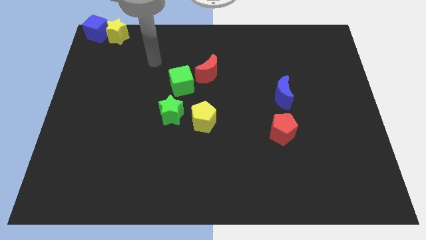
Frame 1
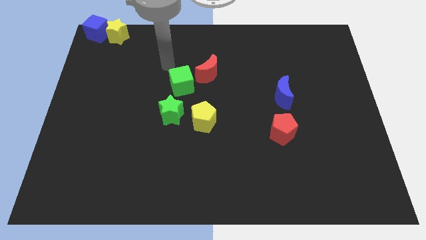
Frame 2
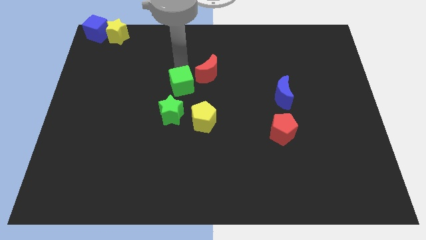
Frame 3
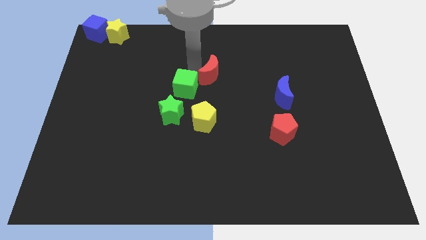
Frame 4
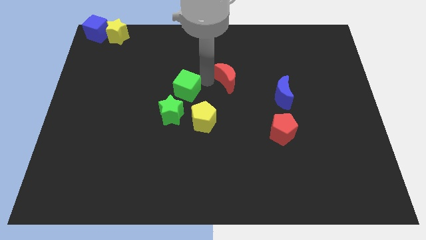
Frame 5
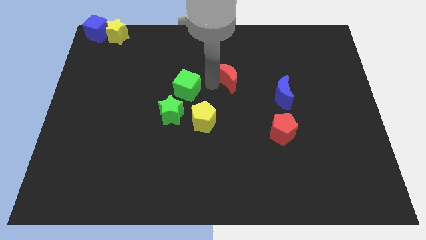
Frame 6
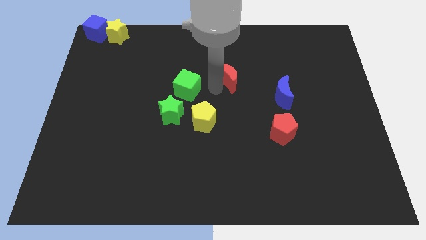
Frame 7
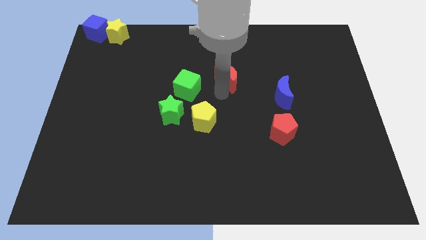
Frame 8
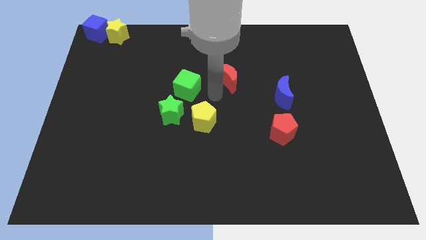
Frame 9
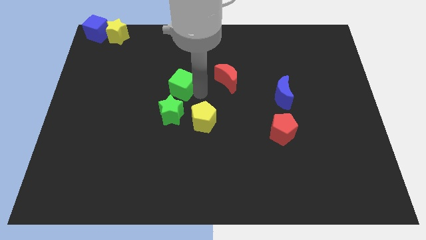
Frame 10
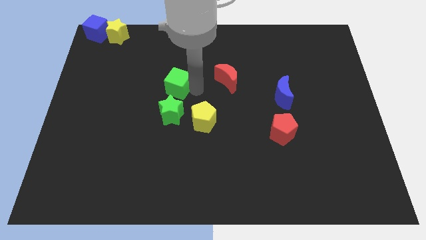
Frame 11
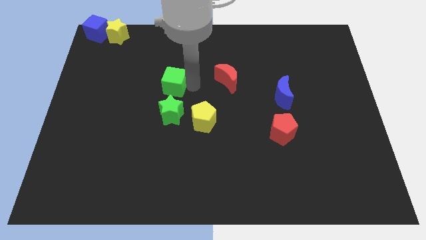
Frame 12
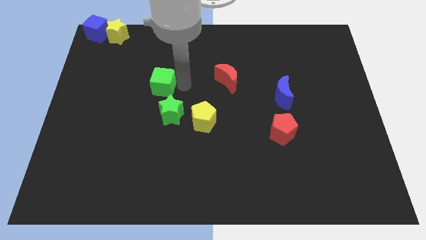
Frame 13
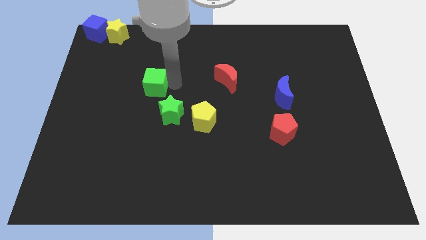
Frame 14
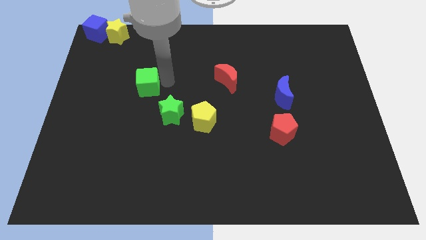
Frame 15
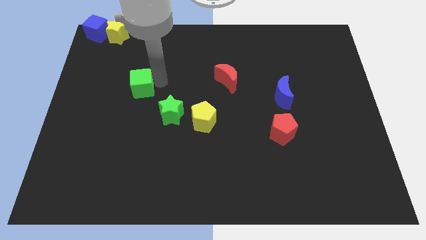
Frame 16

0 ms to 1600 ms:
push the green cube to the left

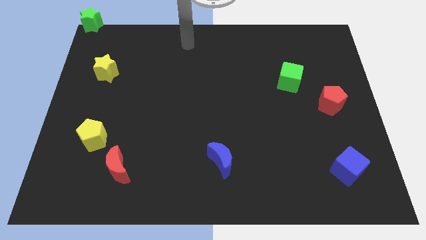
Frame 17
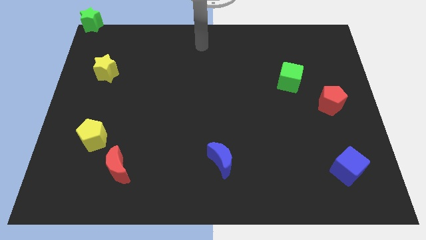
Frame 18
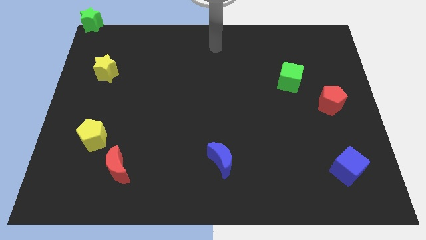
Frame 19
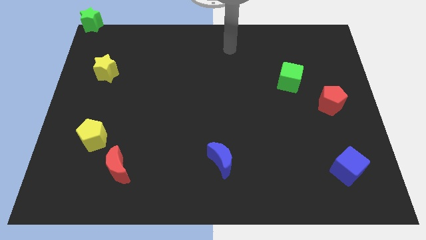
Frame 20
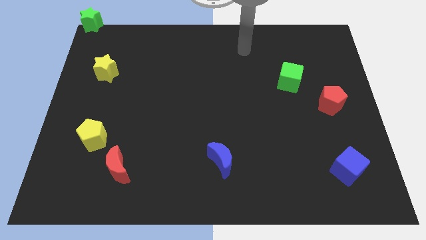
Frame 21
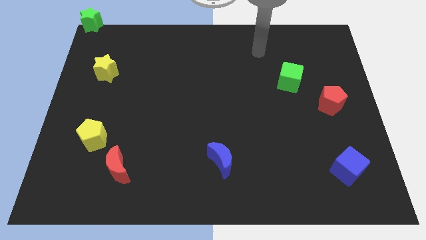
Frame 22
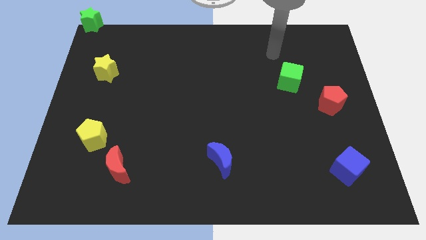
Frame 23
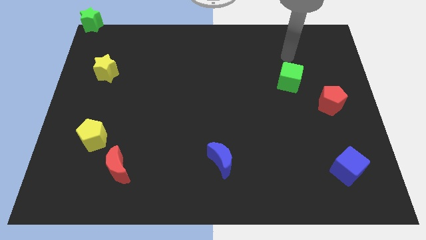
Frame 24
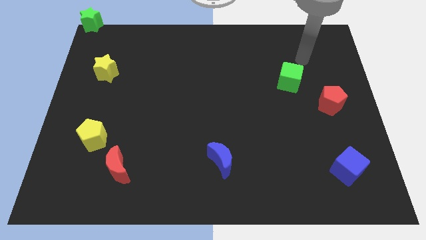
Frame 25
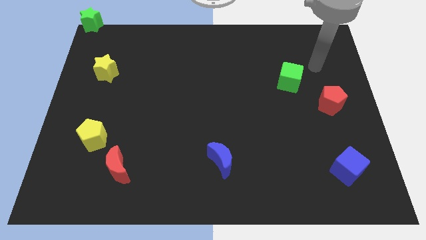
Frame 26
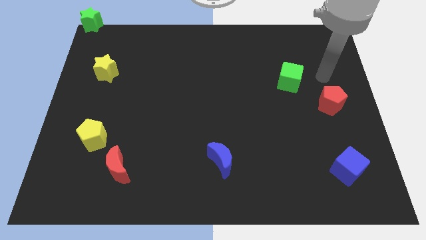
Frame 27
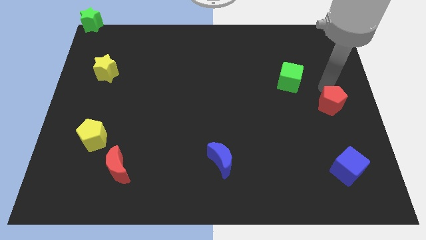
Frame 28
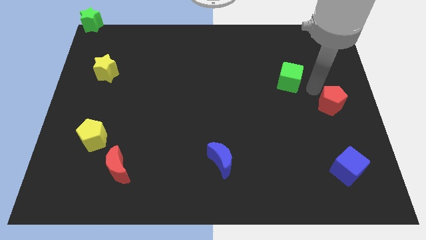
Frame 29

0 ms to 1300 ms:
move your hand towards the green cube

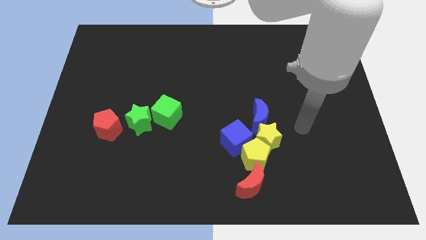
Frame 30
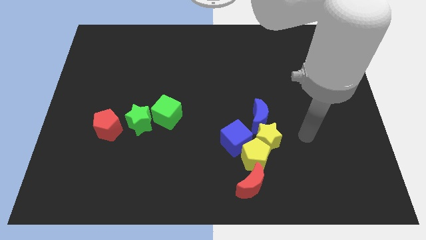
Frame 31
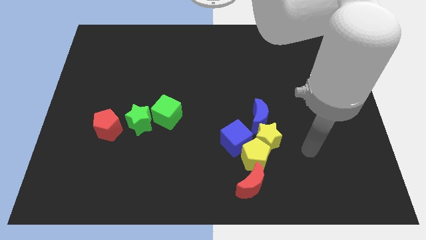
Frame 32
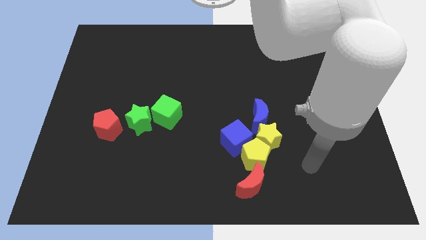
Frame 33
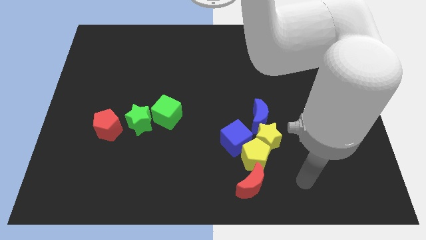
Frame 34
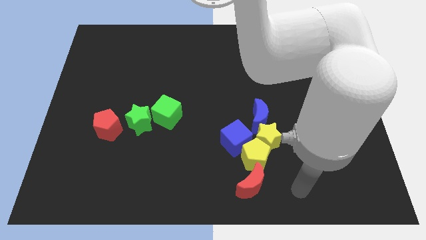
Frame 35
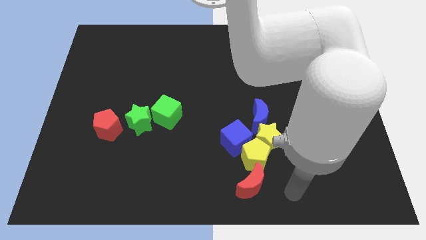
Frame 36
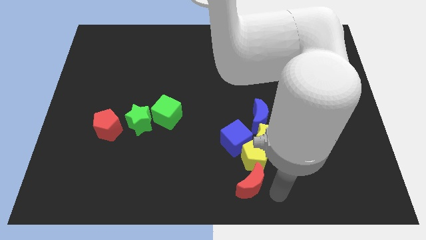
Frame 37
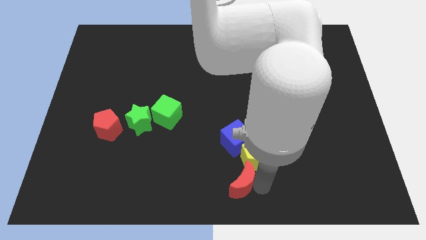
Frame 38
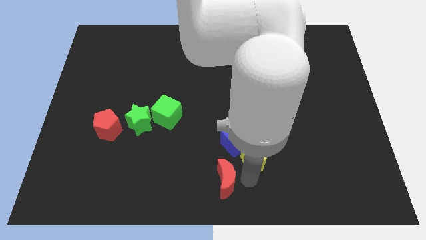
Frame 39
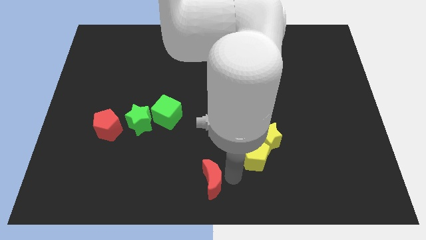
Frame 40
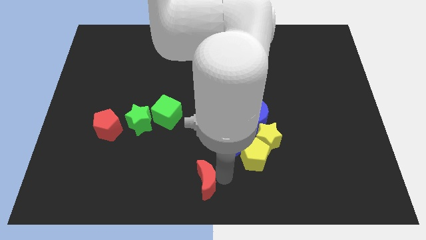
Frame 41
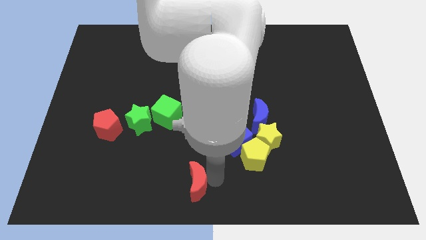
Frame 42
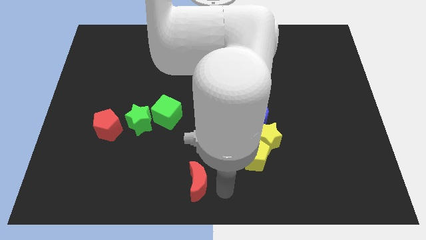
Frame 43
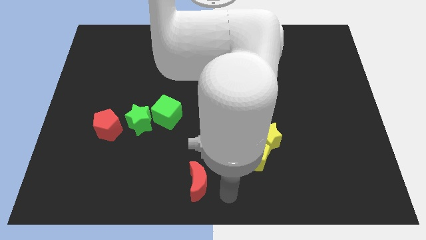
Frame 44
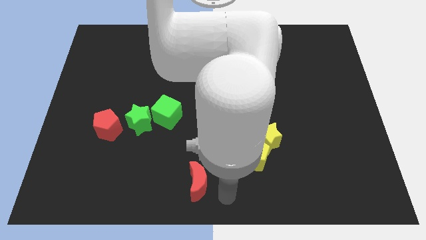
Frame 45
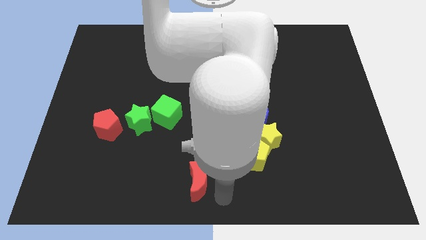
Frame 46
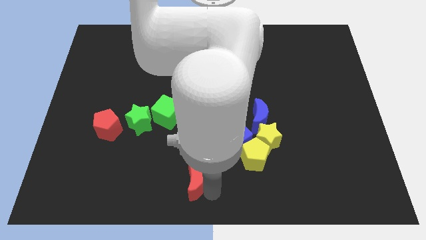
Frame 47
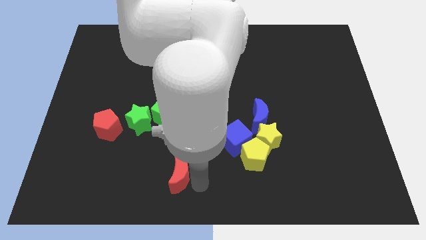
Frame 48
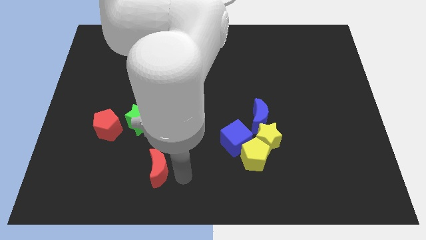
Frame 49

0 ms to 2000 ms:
push red moon towards left

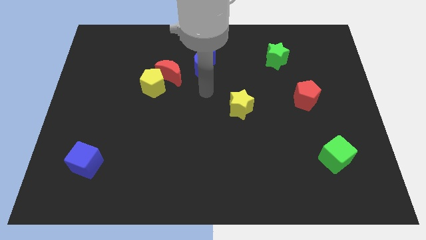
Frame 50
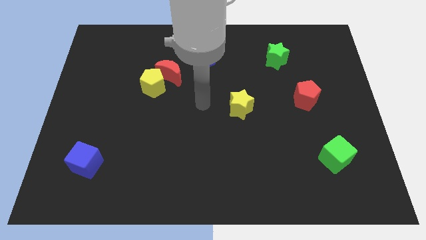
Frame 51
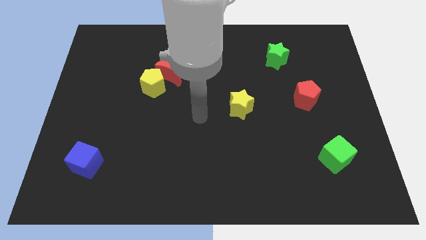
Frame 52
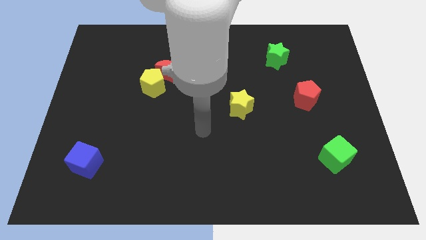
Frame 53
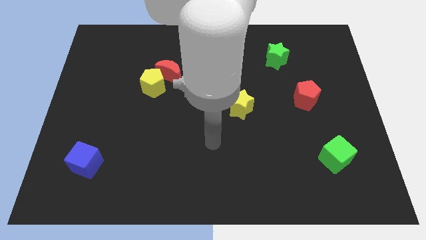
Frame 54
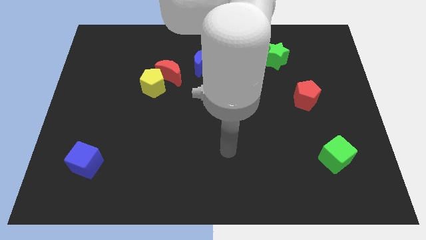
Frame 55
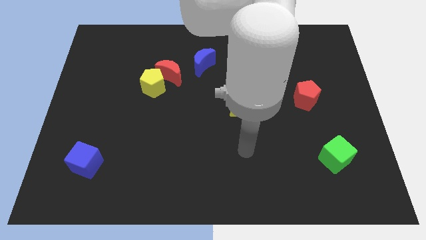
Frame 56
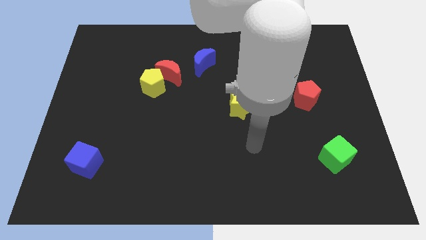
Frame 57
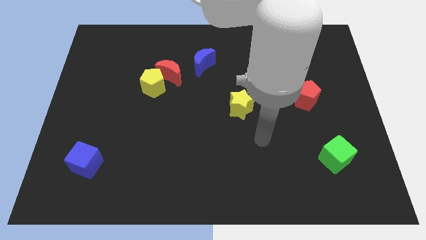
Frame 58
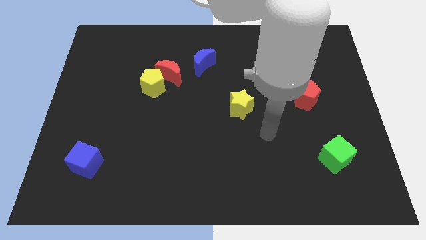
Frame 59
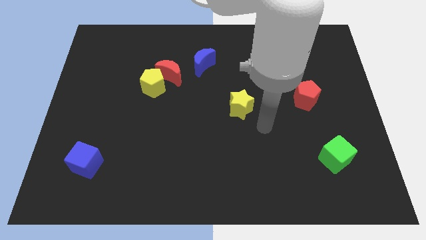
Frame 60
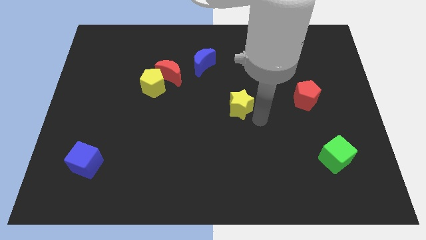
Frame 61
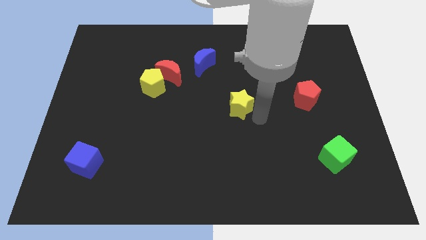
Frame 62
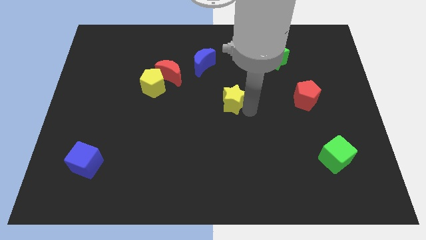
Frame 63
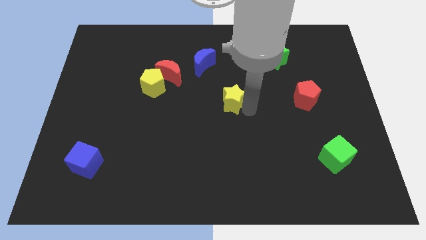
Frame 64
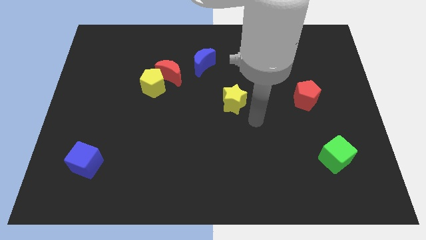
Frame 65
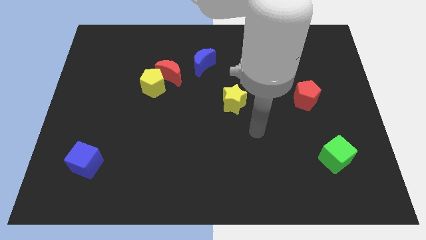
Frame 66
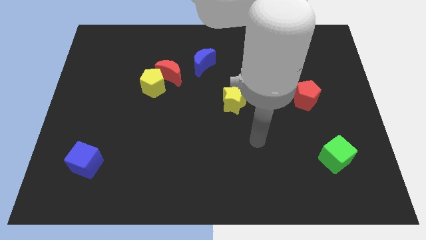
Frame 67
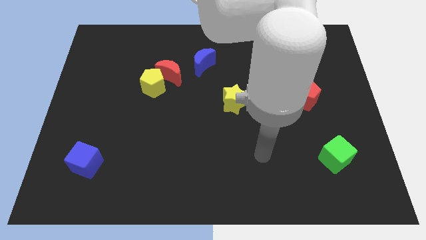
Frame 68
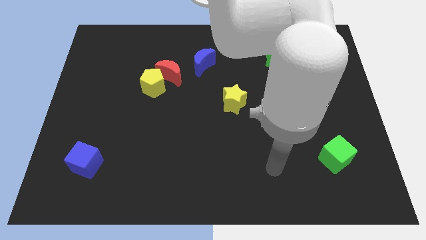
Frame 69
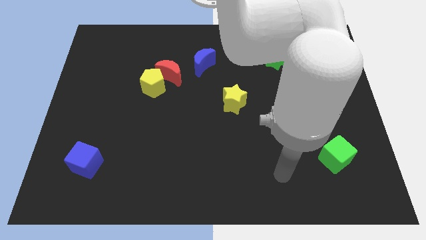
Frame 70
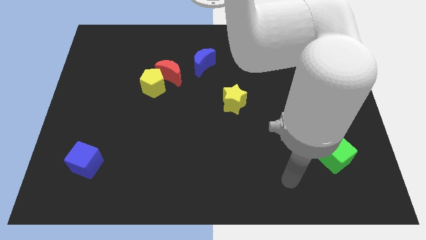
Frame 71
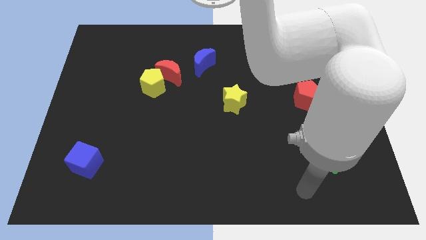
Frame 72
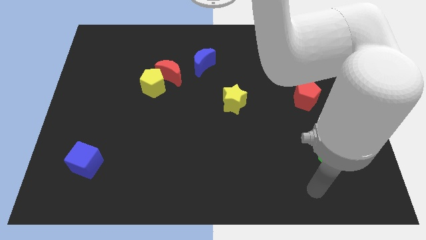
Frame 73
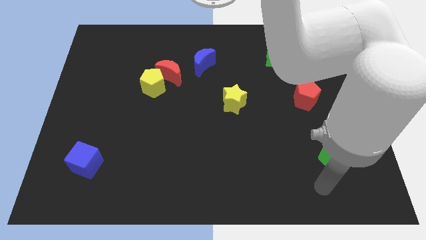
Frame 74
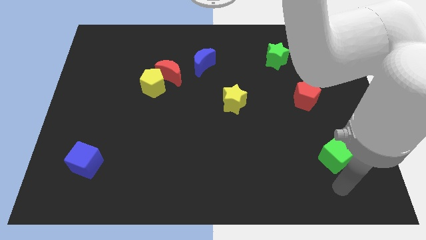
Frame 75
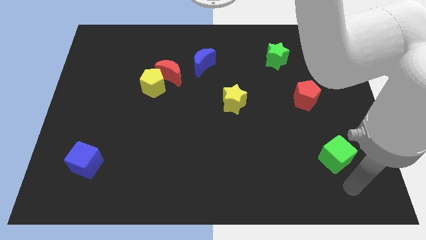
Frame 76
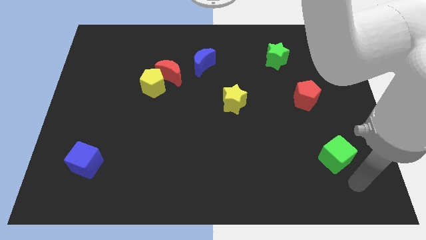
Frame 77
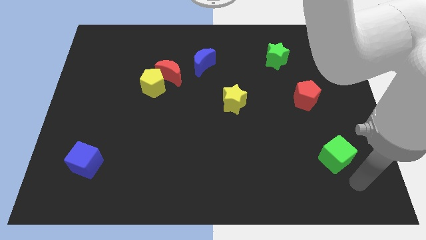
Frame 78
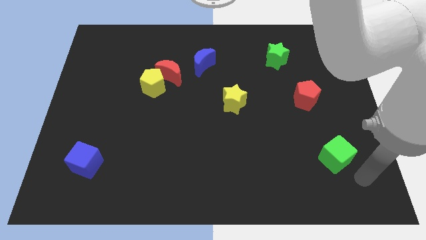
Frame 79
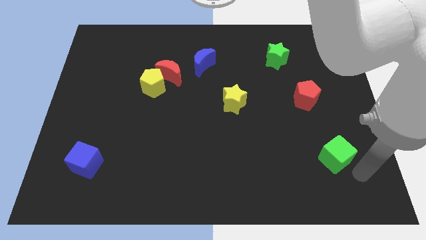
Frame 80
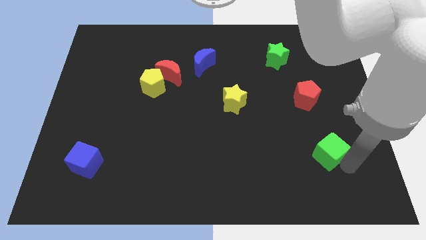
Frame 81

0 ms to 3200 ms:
move the yellow star to the center of the board

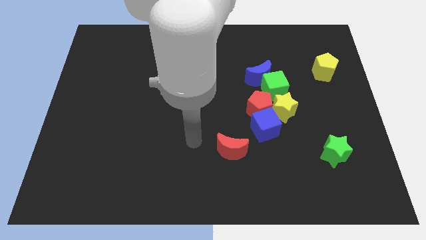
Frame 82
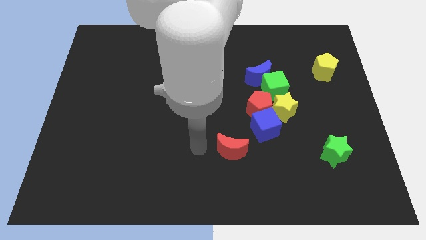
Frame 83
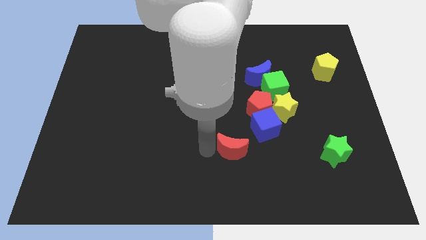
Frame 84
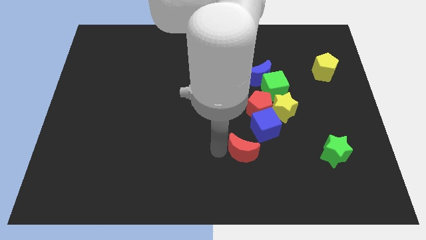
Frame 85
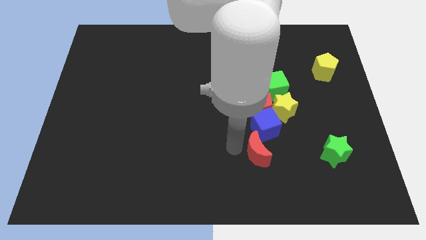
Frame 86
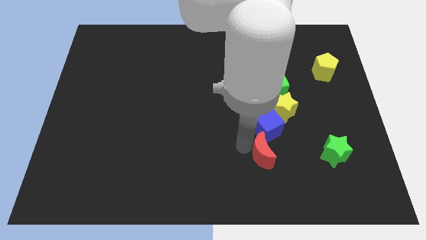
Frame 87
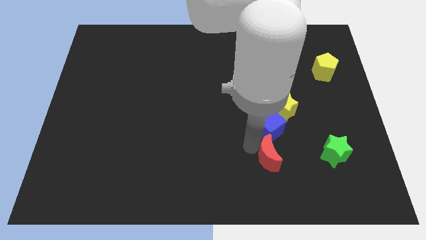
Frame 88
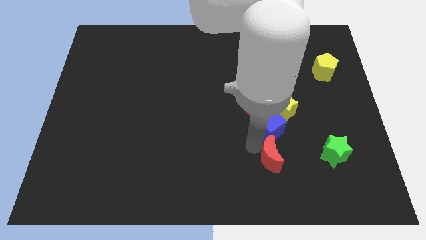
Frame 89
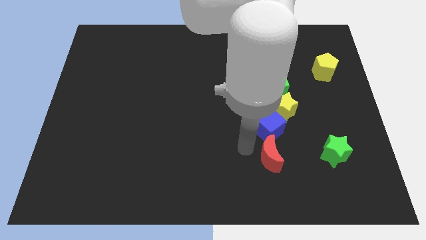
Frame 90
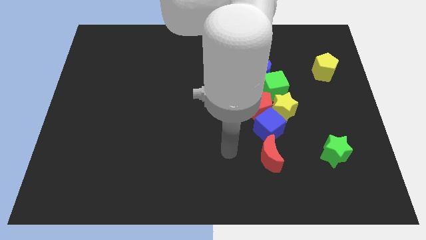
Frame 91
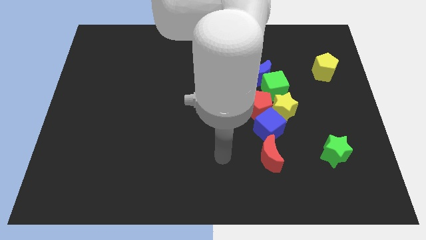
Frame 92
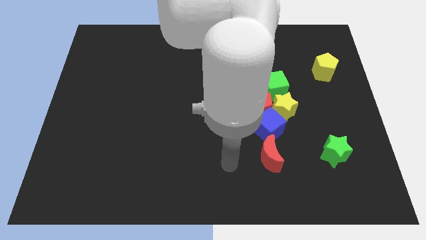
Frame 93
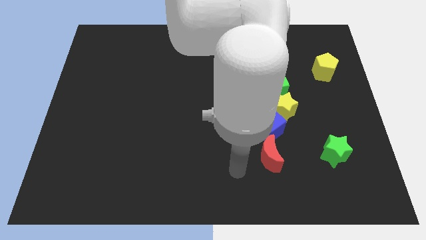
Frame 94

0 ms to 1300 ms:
move the red moon below the blue cube
